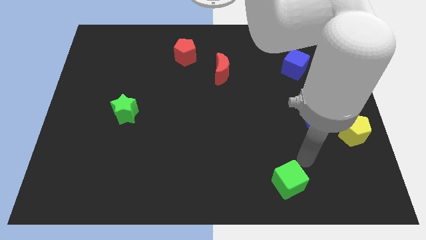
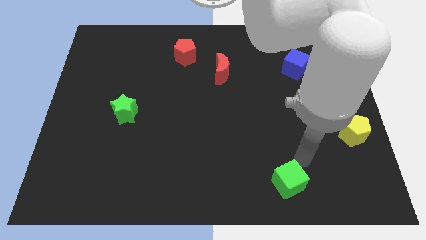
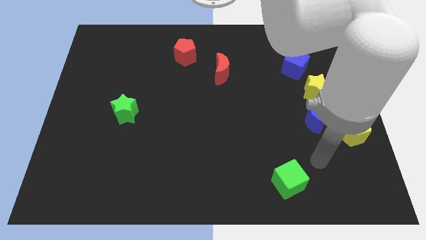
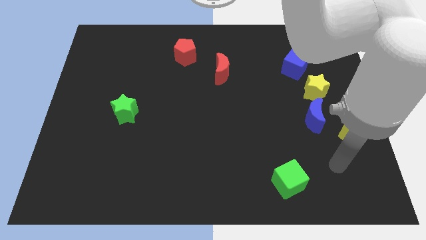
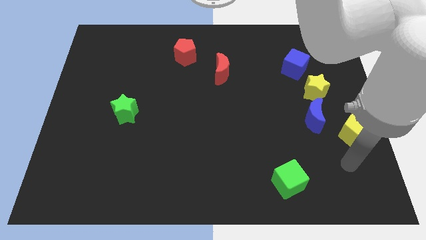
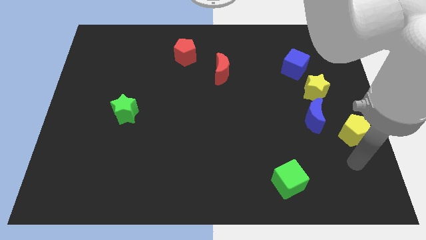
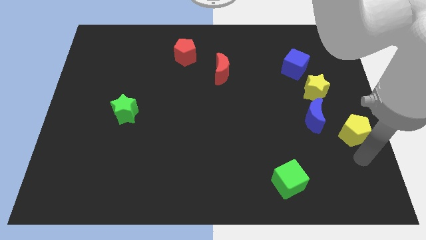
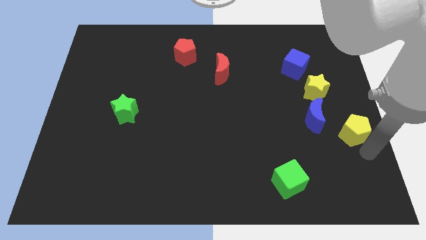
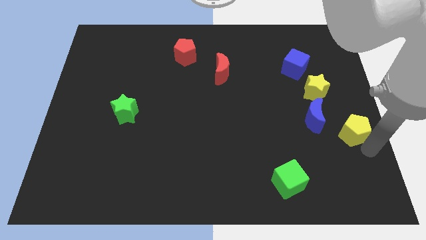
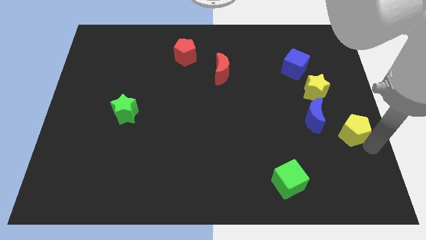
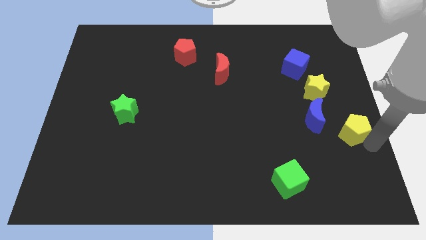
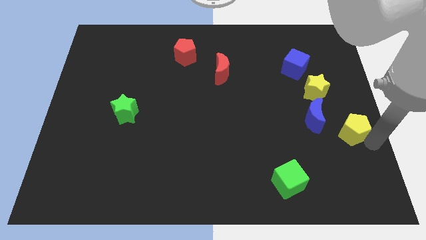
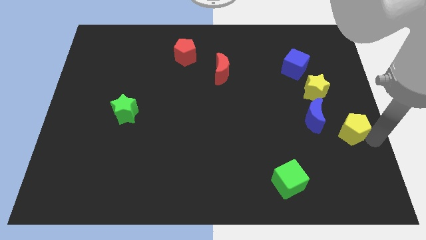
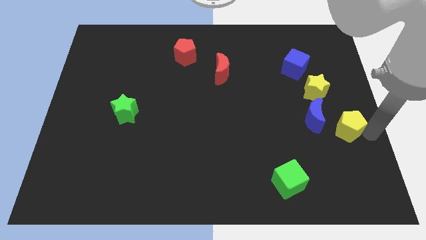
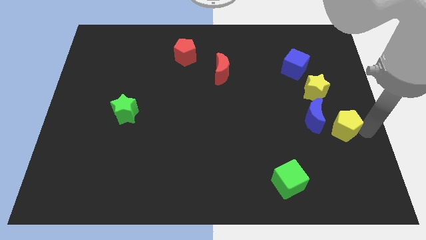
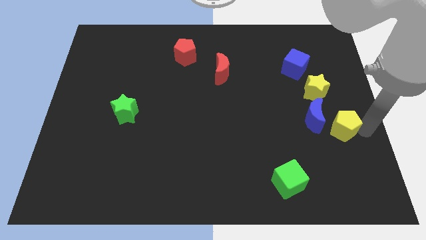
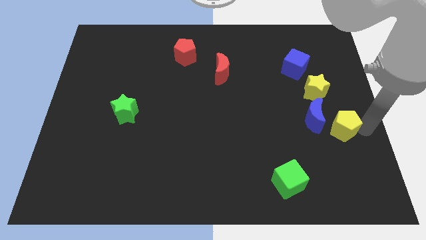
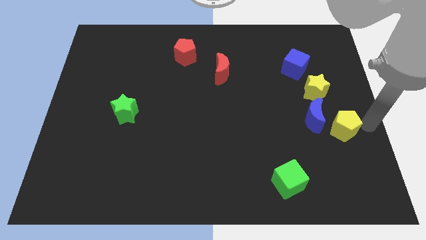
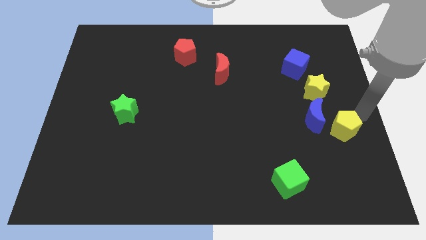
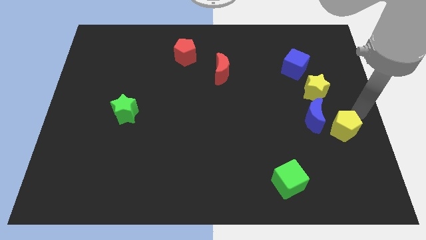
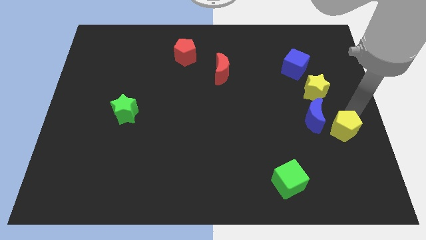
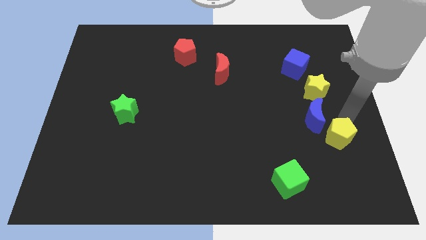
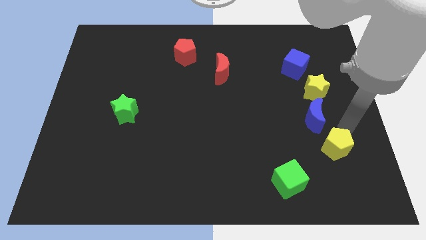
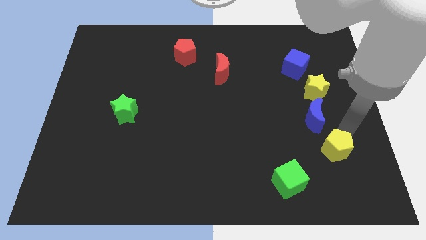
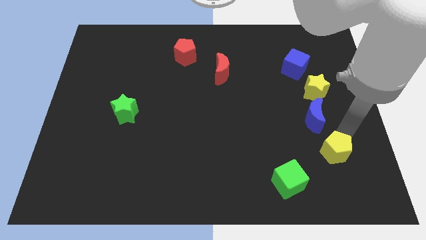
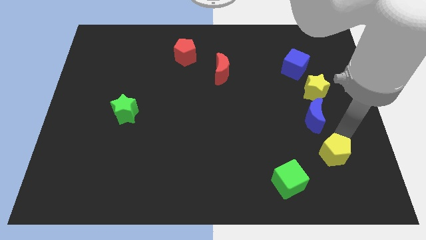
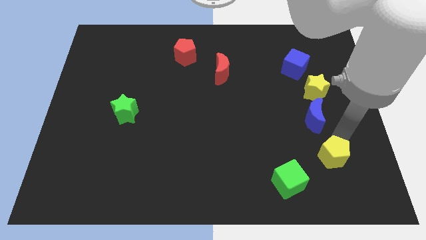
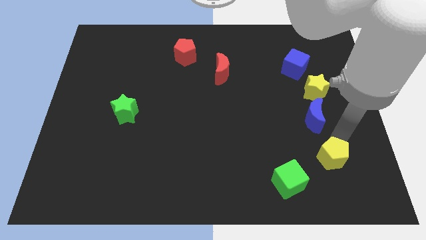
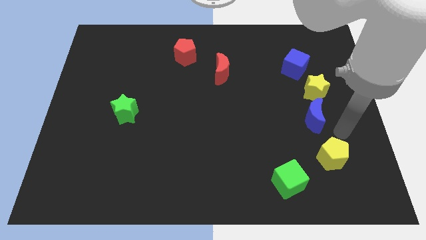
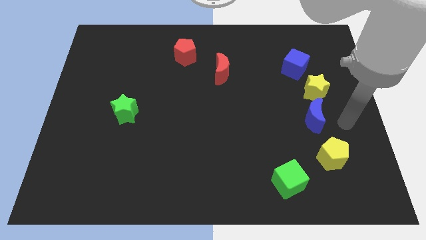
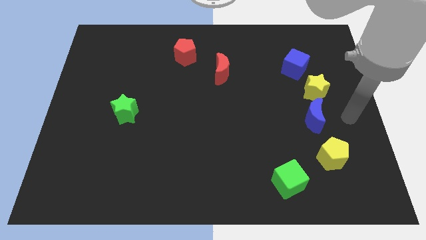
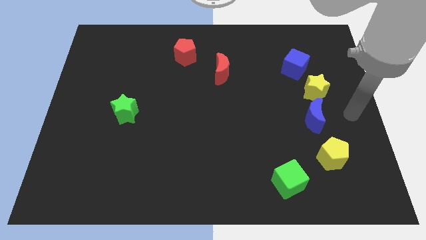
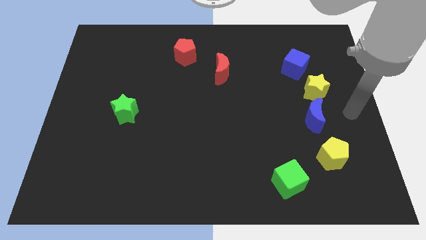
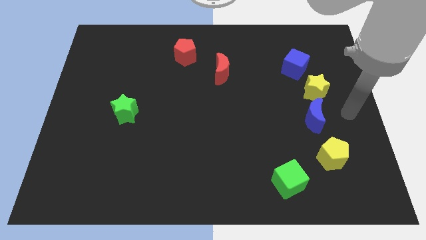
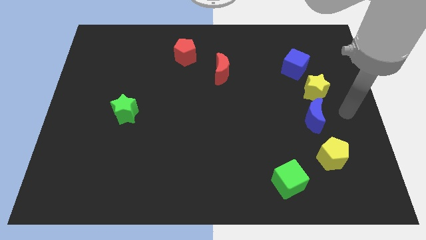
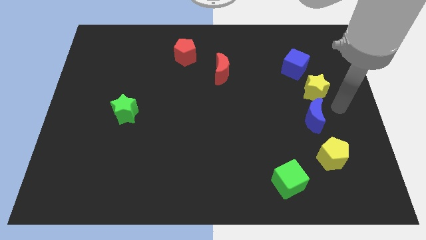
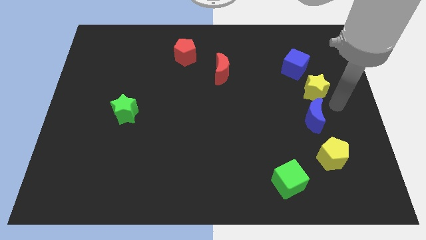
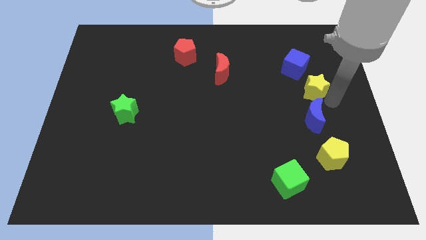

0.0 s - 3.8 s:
move yellow pentagon to the right of green cube

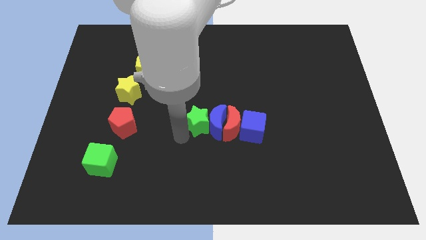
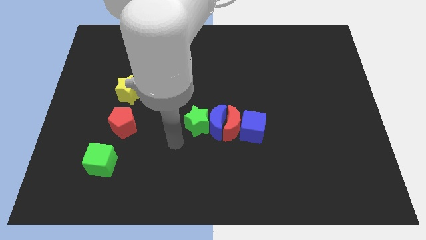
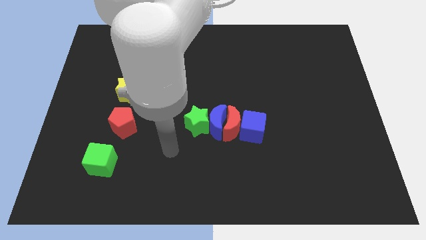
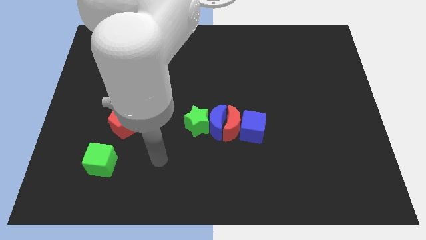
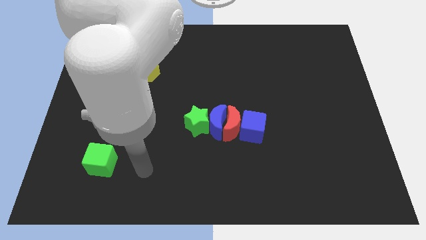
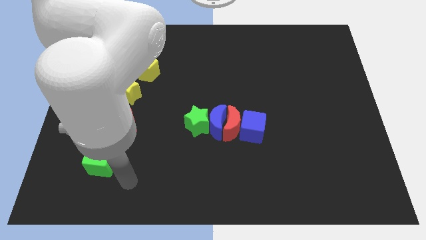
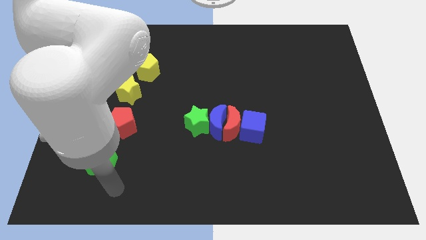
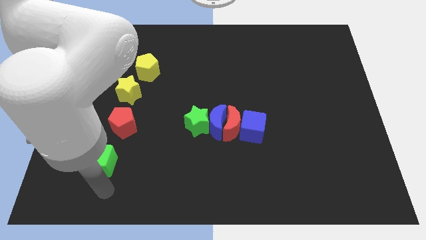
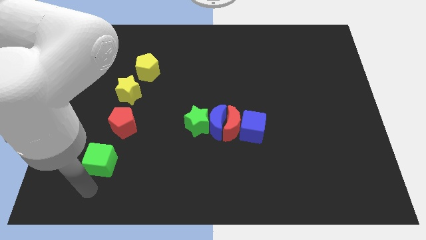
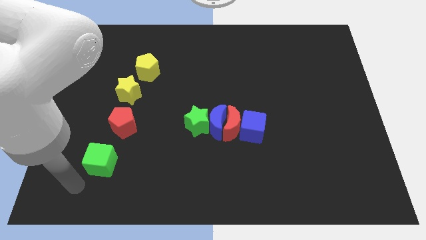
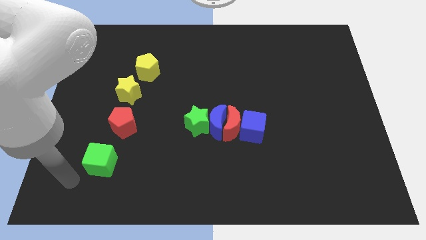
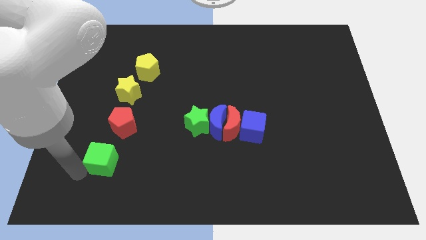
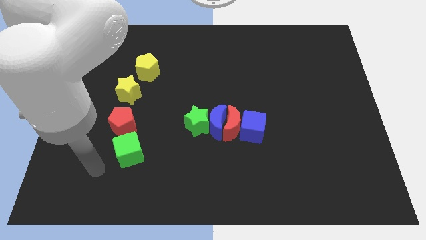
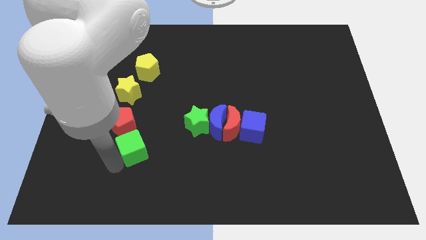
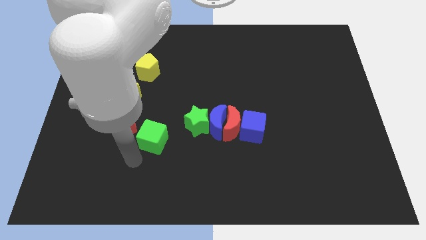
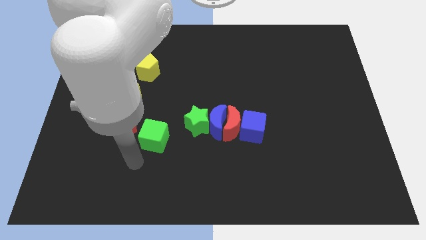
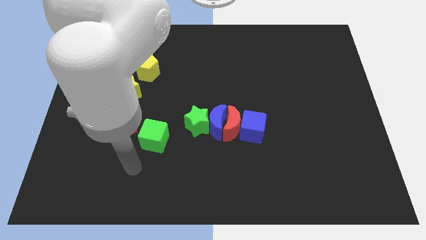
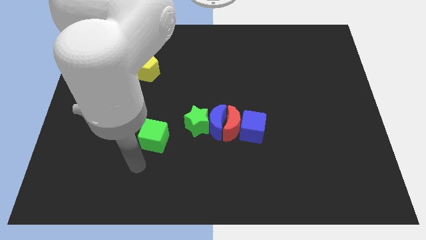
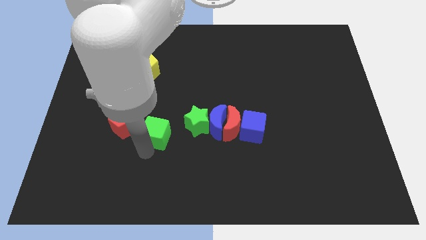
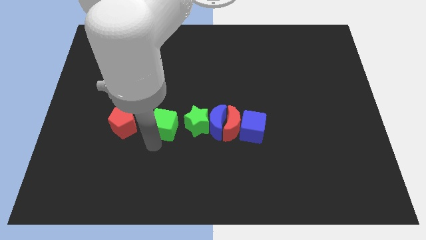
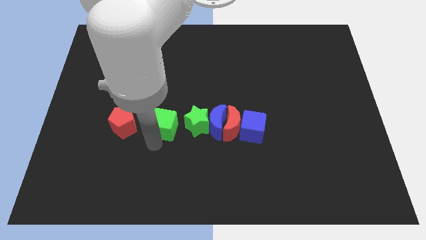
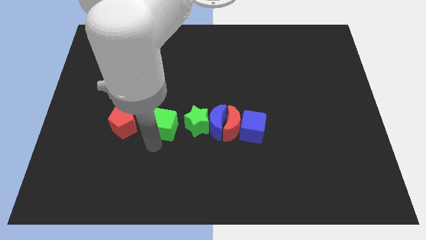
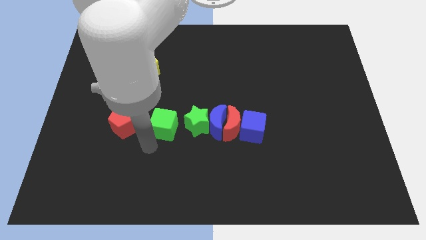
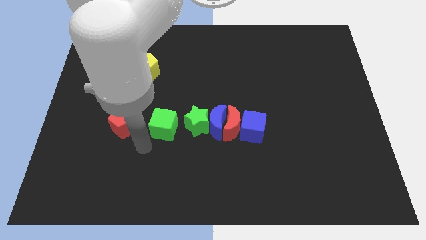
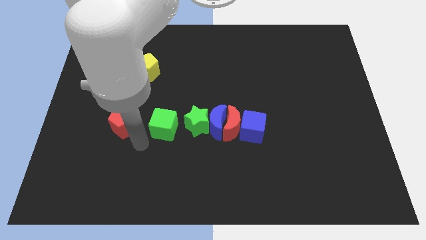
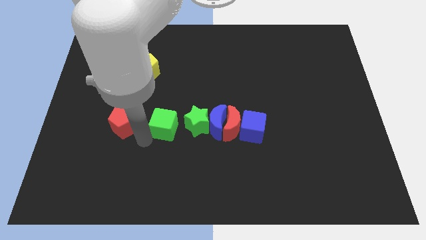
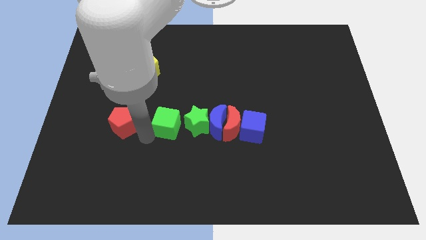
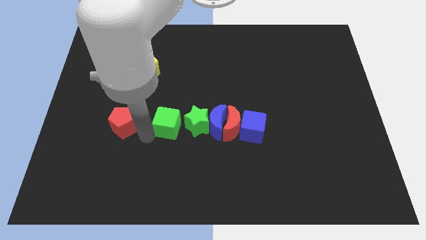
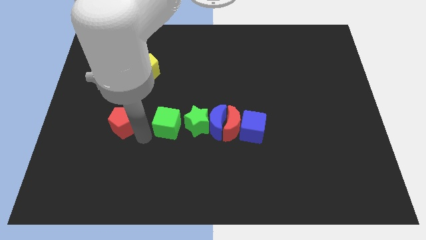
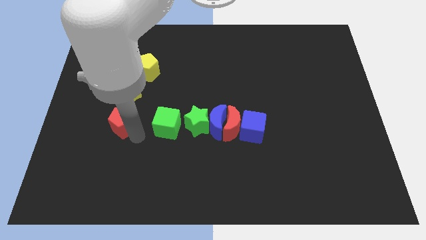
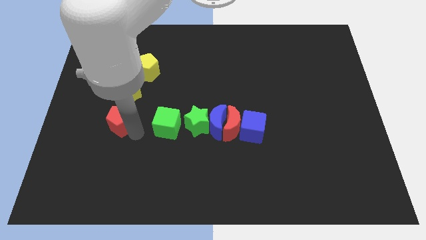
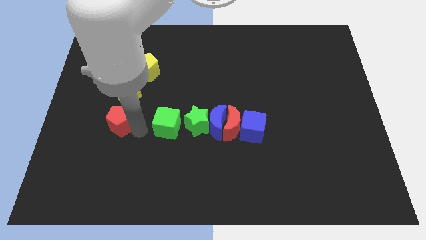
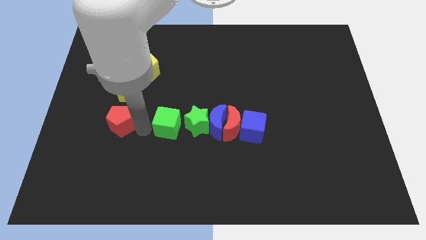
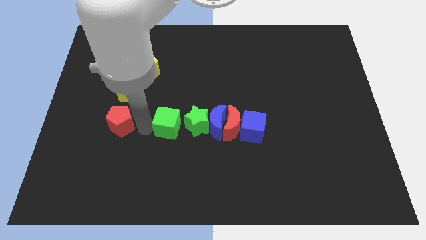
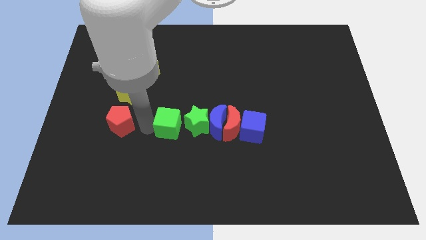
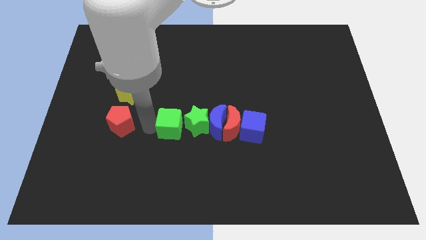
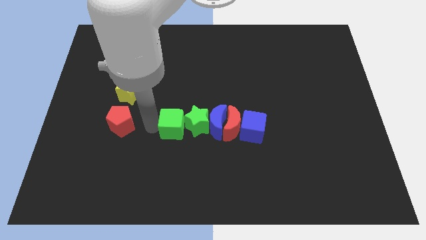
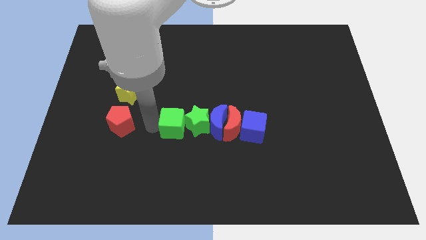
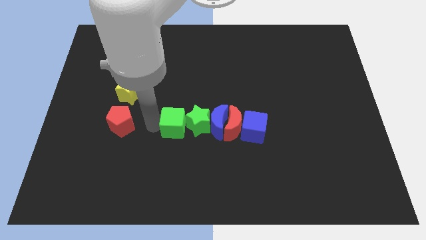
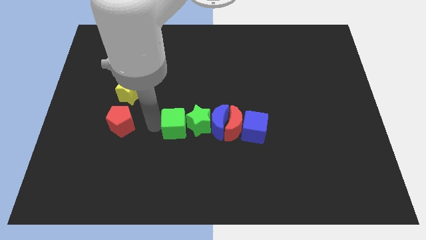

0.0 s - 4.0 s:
drag the green cube into the left side of the green star

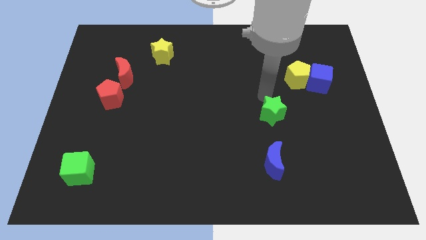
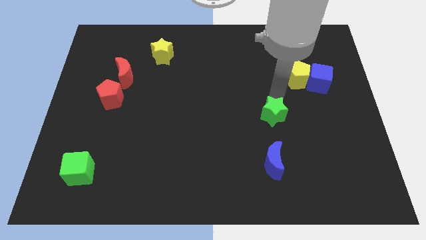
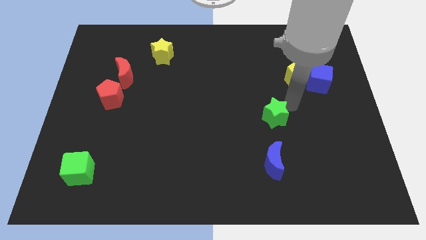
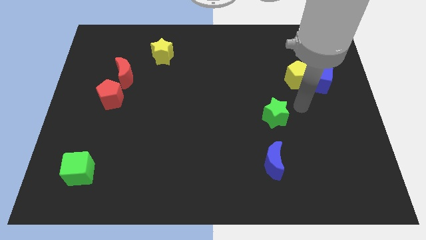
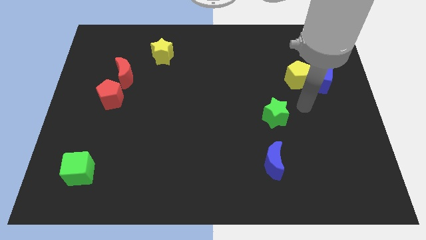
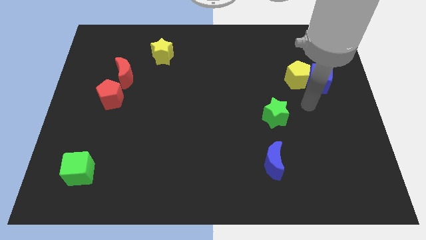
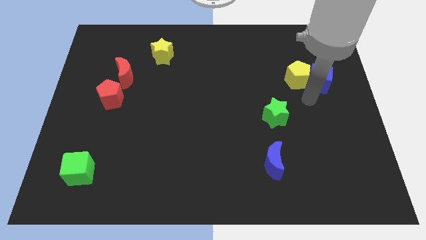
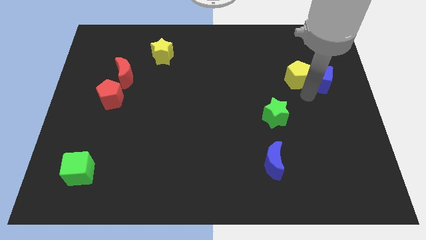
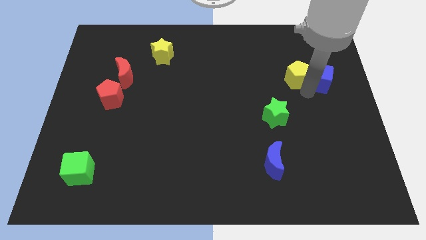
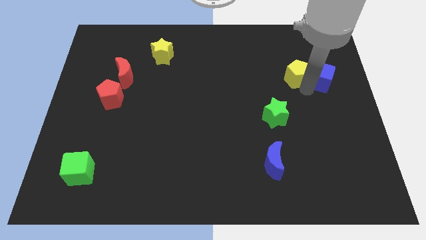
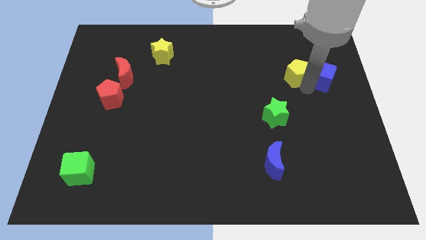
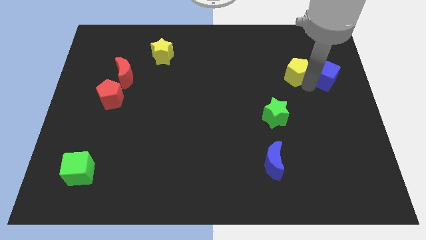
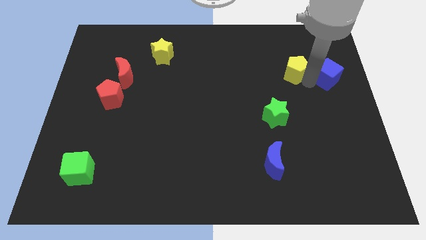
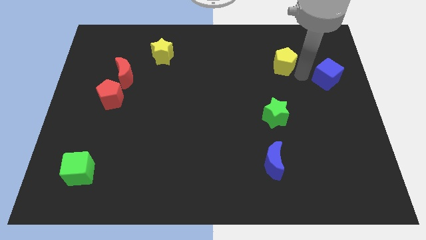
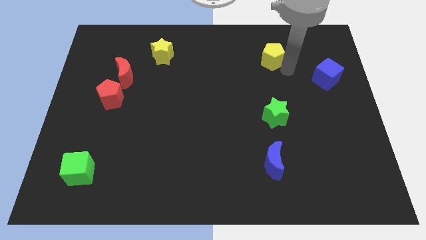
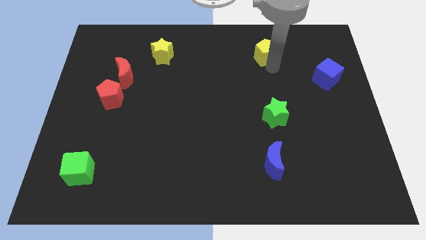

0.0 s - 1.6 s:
push yellow pentagon upwards
